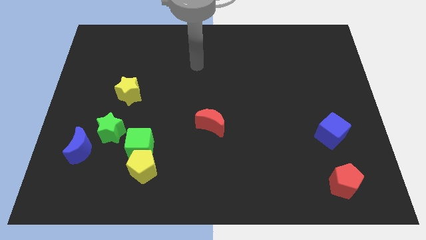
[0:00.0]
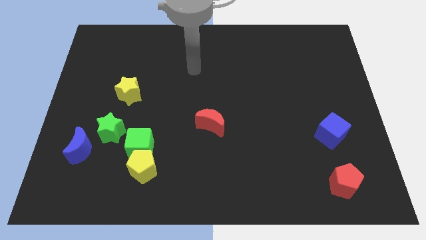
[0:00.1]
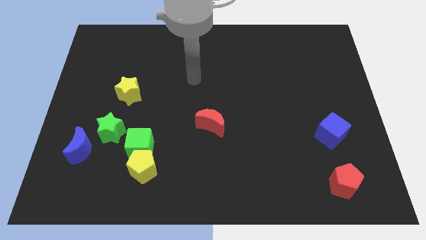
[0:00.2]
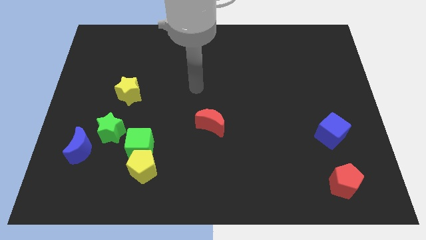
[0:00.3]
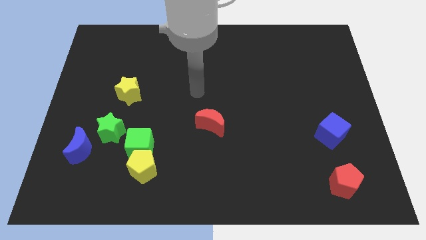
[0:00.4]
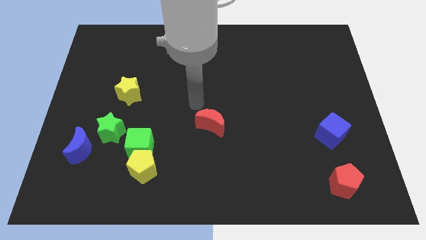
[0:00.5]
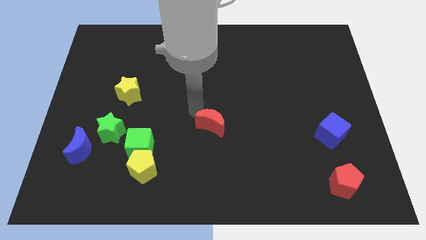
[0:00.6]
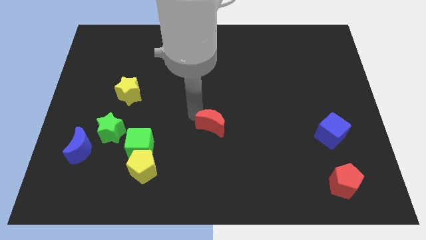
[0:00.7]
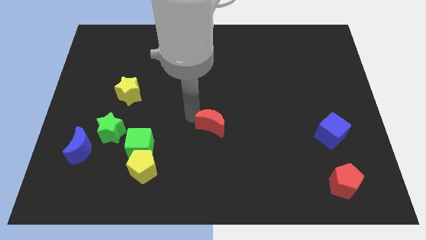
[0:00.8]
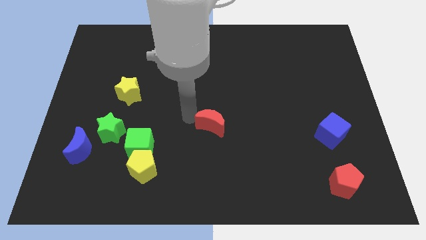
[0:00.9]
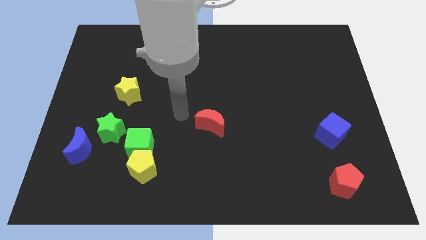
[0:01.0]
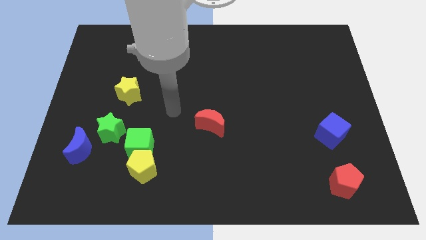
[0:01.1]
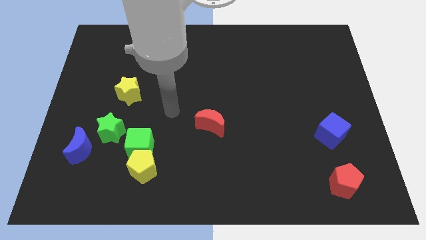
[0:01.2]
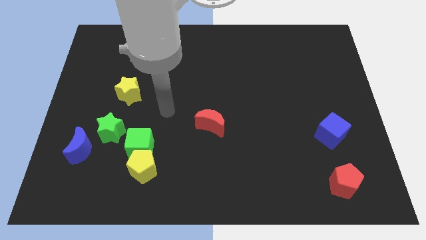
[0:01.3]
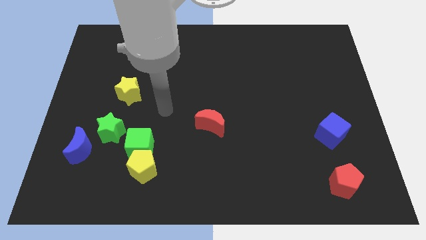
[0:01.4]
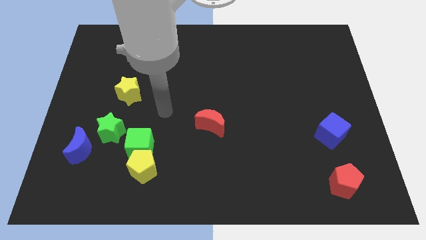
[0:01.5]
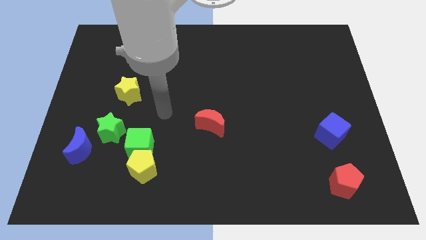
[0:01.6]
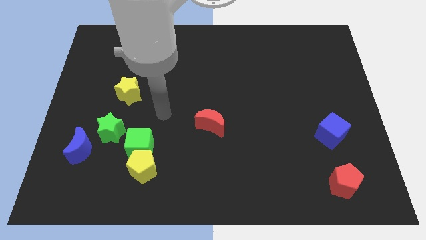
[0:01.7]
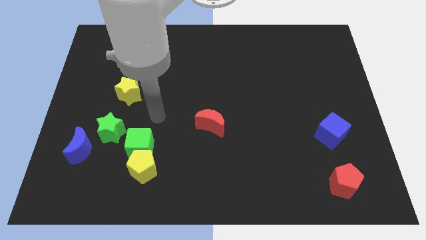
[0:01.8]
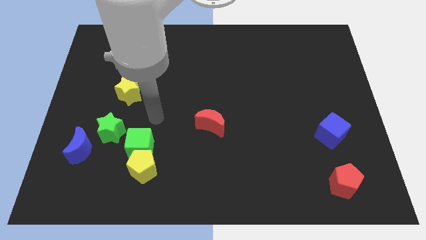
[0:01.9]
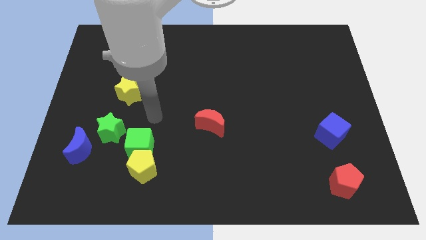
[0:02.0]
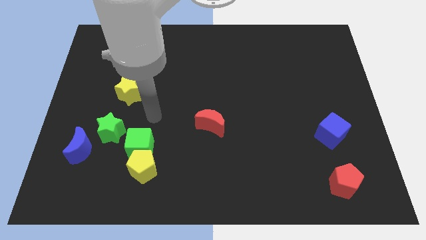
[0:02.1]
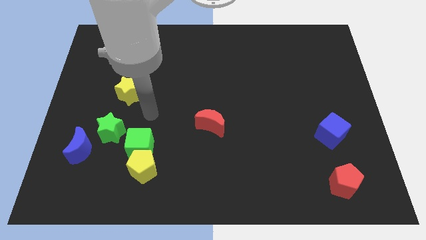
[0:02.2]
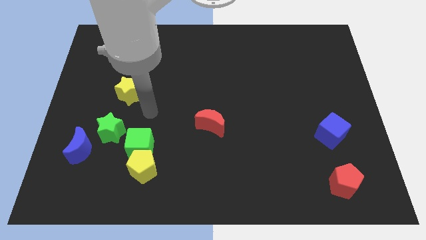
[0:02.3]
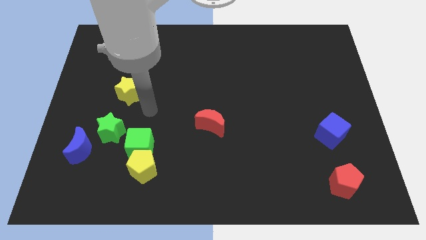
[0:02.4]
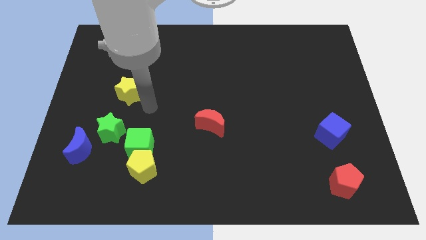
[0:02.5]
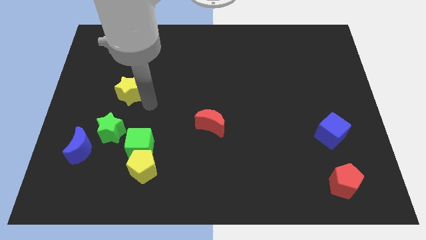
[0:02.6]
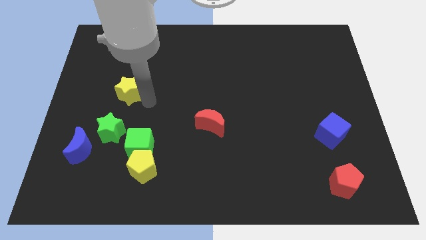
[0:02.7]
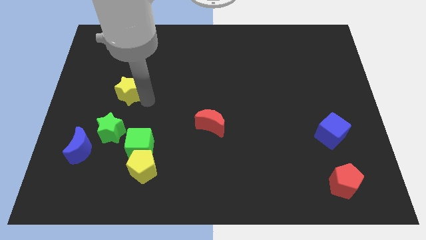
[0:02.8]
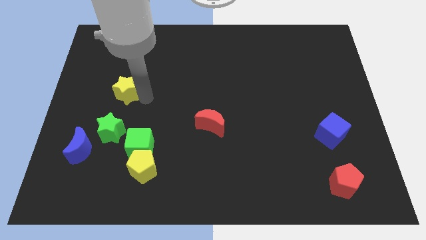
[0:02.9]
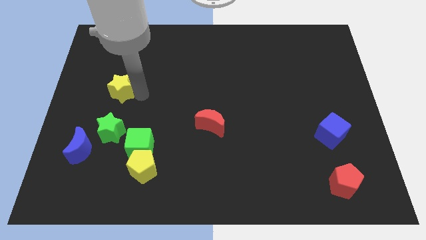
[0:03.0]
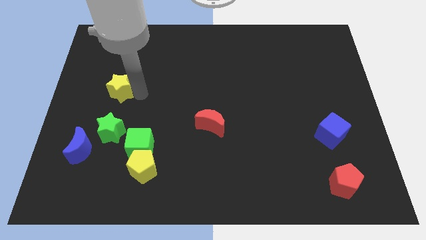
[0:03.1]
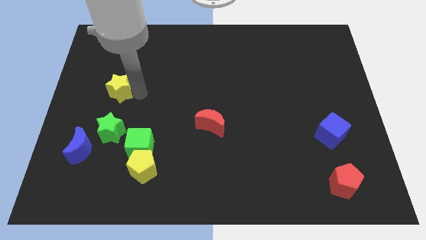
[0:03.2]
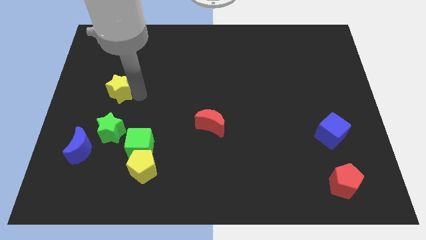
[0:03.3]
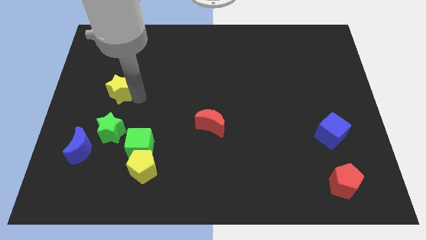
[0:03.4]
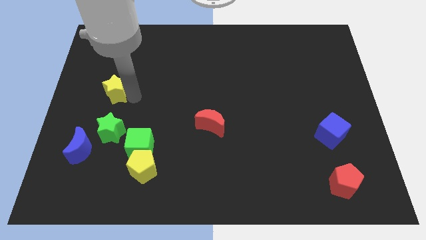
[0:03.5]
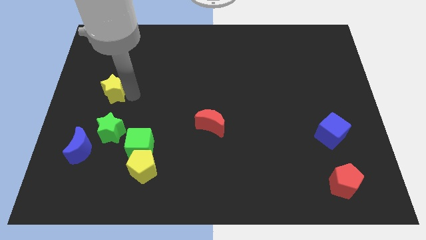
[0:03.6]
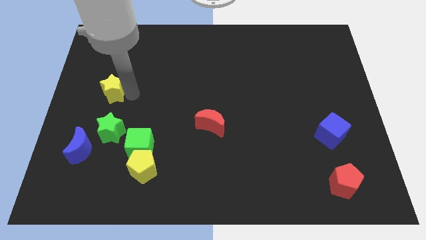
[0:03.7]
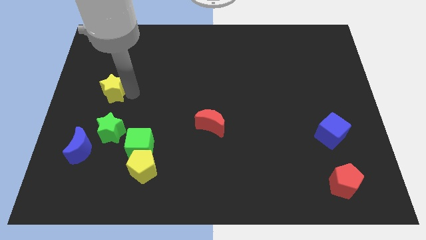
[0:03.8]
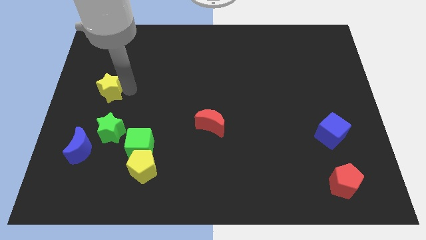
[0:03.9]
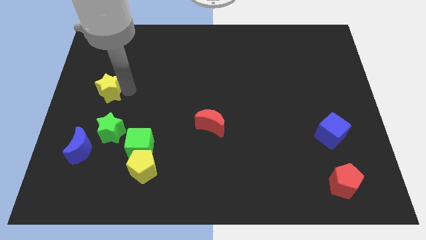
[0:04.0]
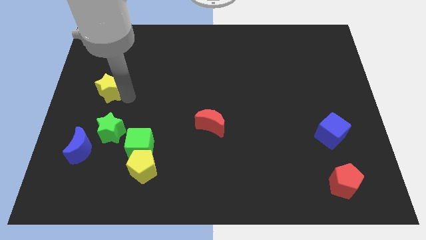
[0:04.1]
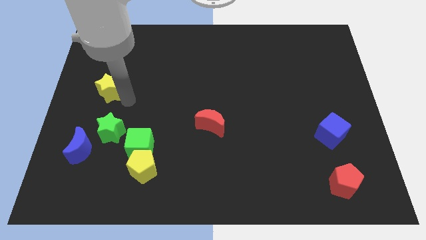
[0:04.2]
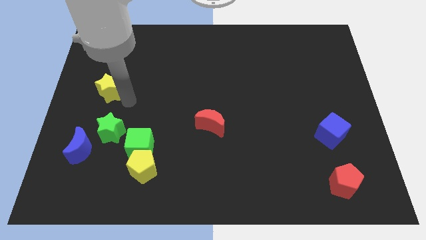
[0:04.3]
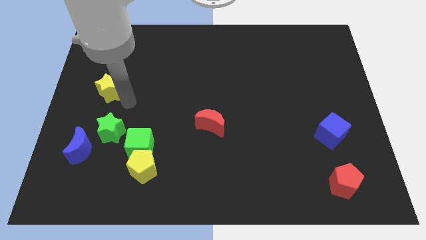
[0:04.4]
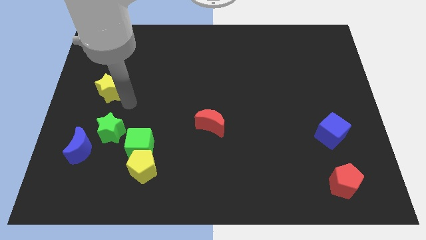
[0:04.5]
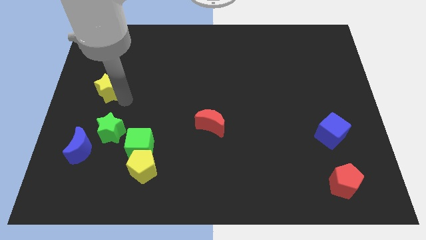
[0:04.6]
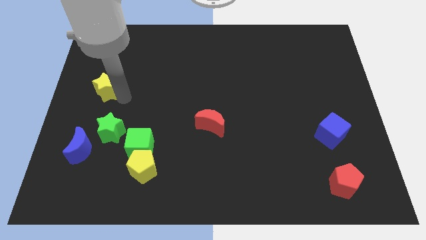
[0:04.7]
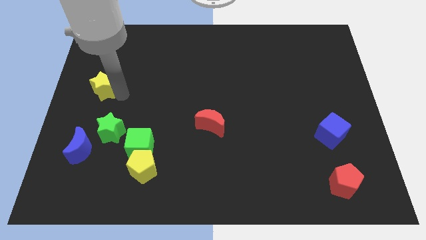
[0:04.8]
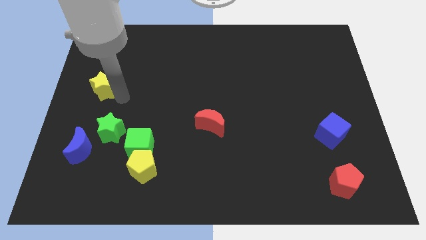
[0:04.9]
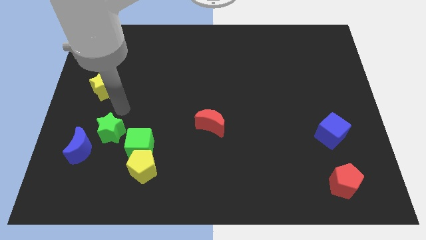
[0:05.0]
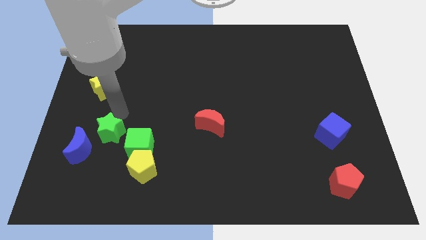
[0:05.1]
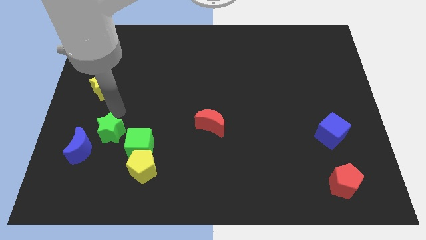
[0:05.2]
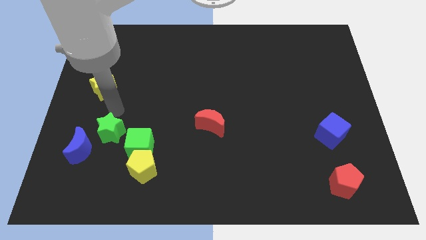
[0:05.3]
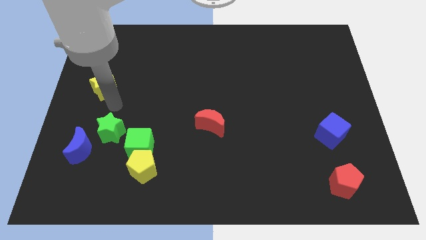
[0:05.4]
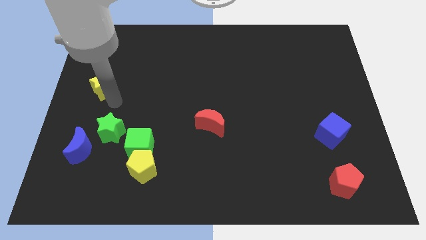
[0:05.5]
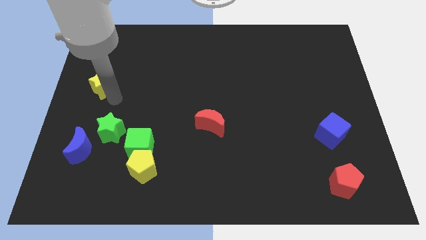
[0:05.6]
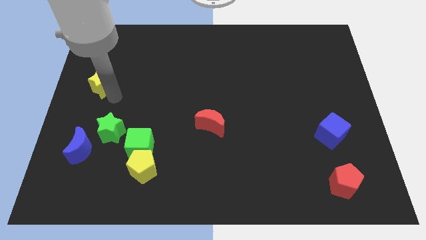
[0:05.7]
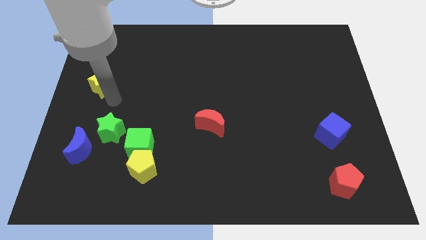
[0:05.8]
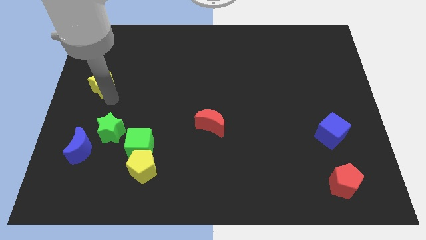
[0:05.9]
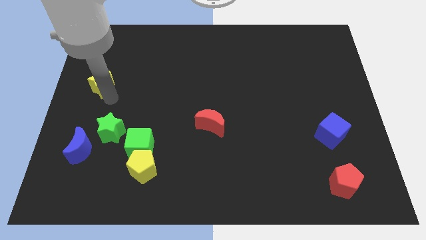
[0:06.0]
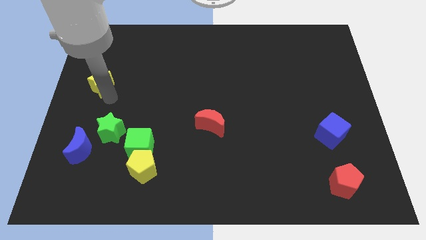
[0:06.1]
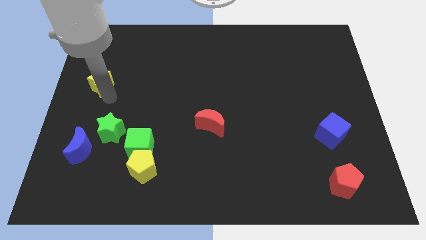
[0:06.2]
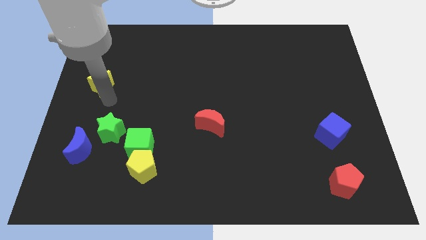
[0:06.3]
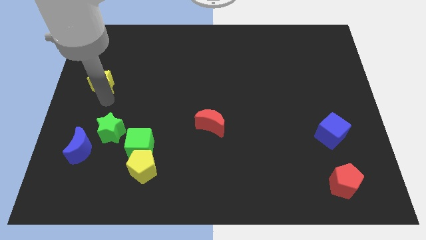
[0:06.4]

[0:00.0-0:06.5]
push the yellow star slightly to the left side of the board

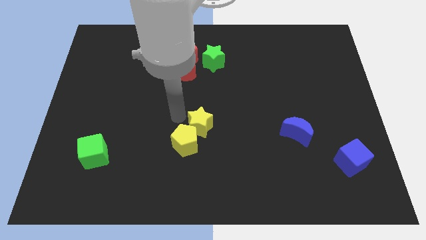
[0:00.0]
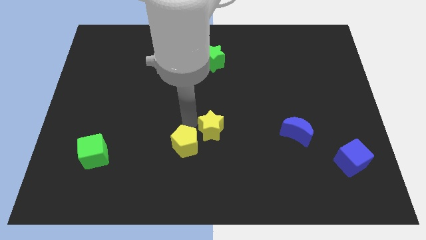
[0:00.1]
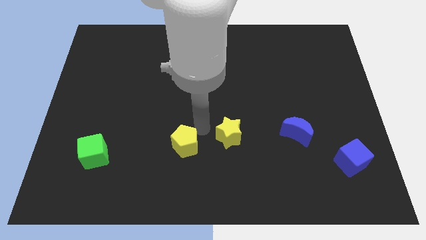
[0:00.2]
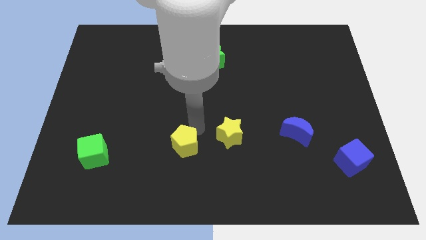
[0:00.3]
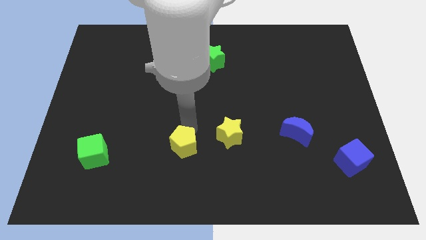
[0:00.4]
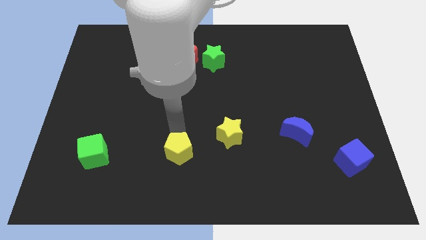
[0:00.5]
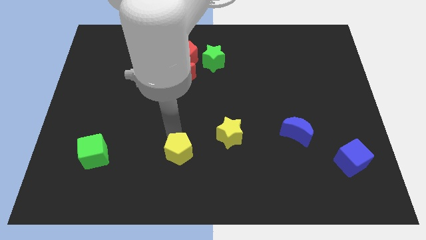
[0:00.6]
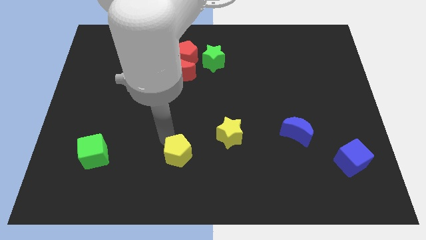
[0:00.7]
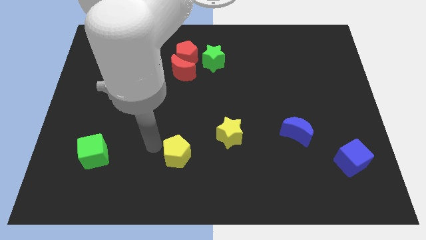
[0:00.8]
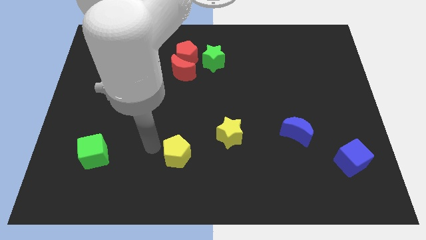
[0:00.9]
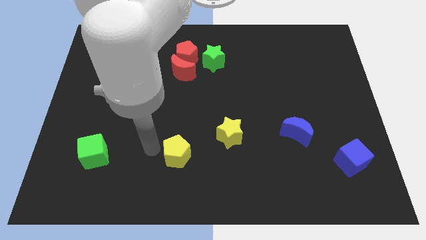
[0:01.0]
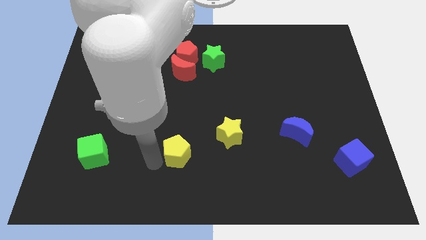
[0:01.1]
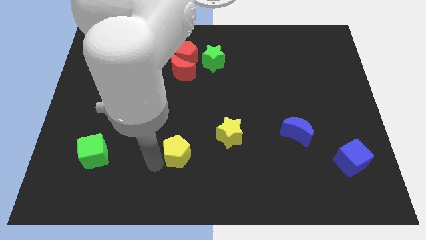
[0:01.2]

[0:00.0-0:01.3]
separate the yellow blocks from each other

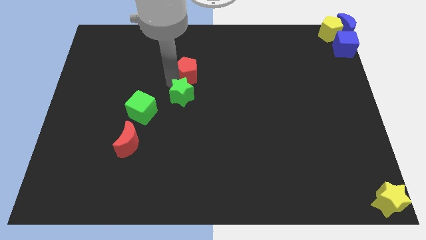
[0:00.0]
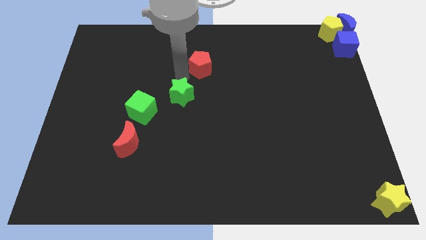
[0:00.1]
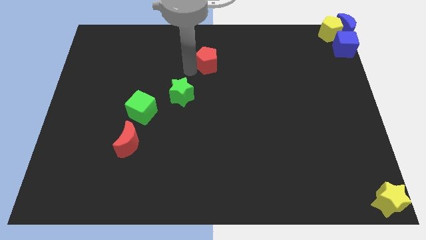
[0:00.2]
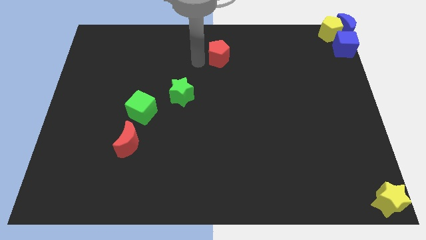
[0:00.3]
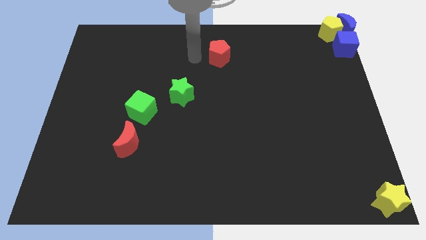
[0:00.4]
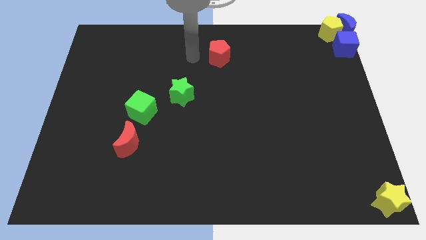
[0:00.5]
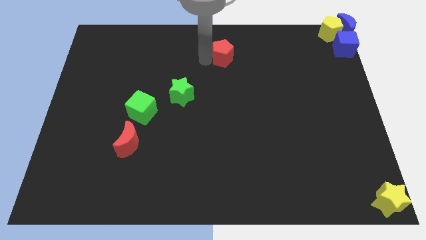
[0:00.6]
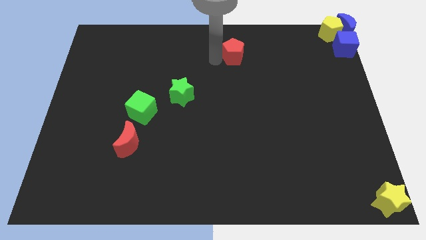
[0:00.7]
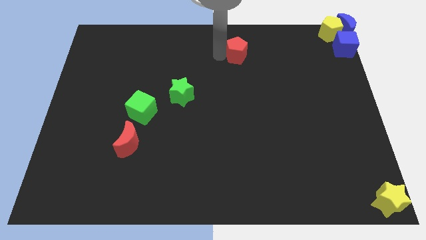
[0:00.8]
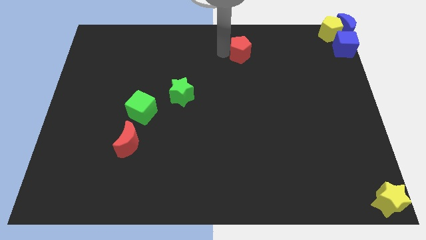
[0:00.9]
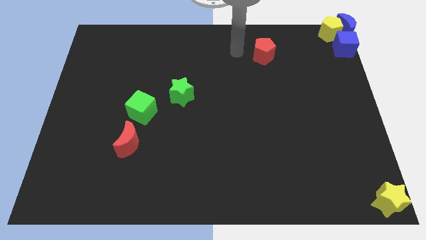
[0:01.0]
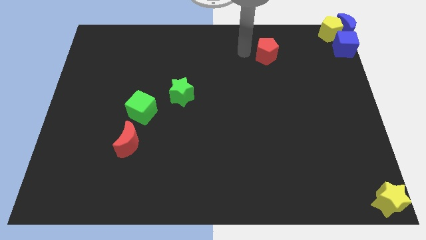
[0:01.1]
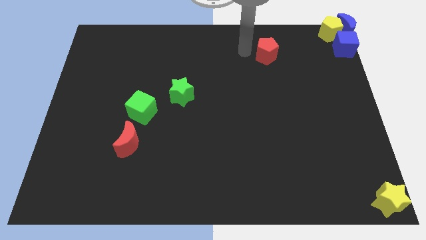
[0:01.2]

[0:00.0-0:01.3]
move the red pentagon away from the green star
